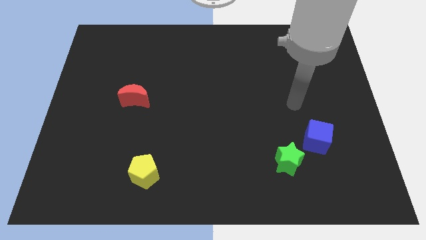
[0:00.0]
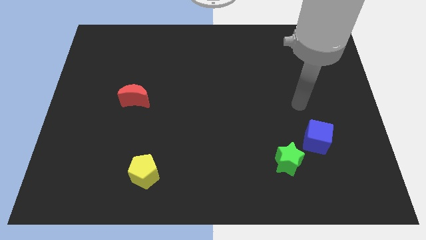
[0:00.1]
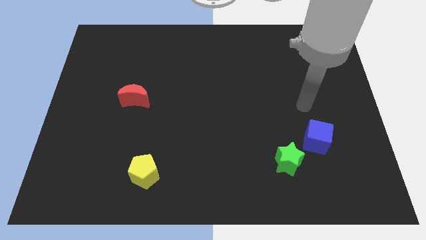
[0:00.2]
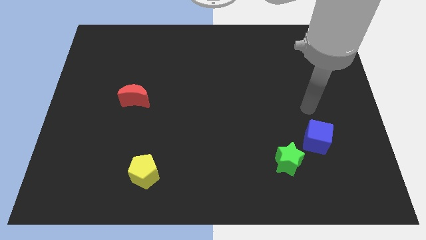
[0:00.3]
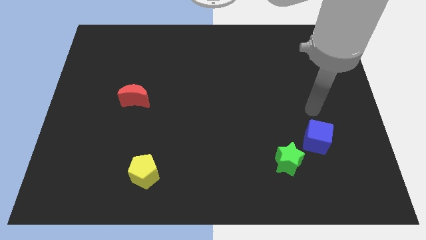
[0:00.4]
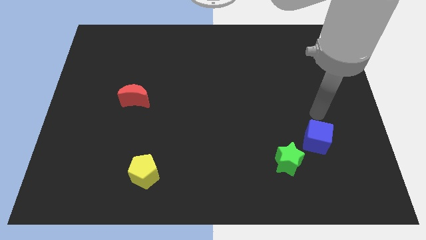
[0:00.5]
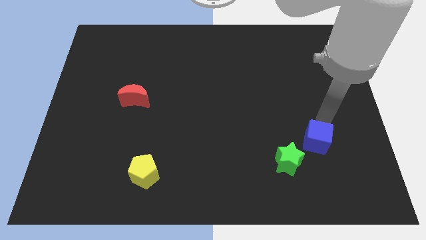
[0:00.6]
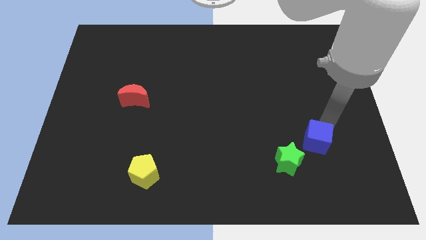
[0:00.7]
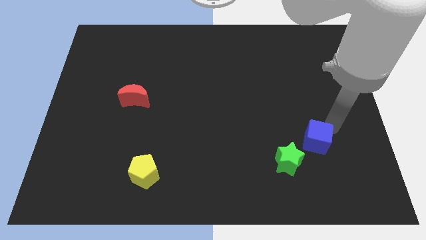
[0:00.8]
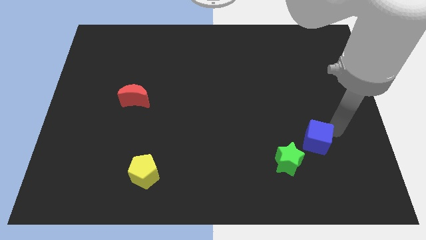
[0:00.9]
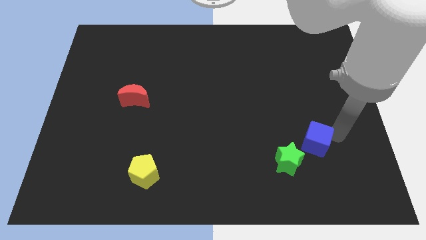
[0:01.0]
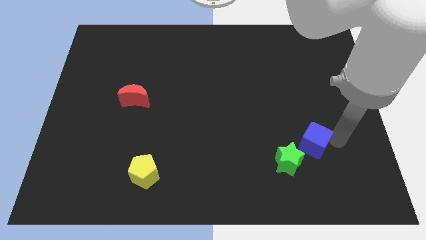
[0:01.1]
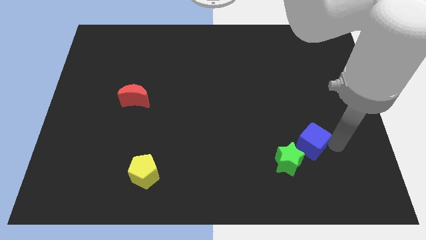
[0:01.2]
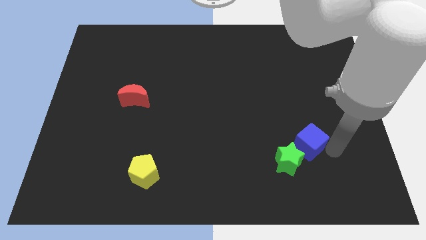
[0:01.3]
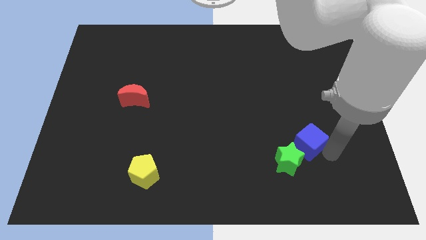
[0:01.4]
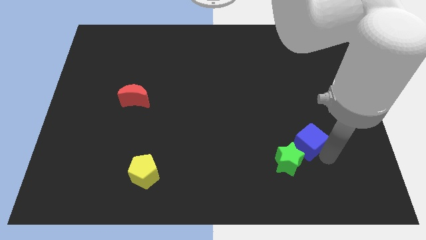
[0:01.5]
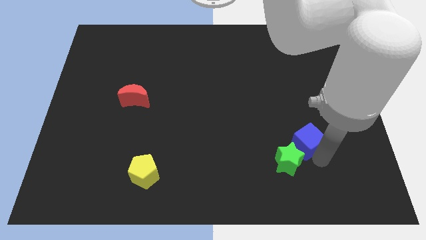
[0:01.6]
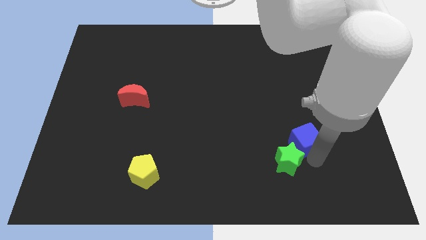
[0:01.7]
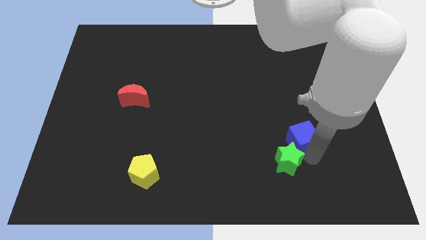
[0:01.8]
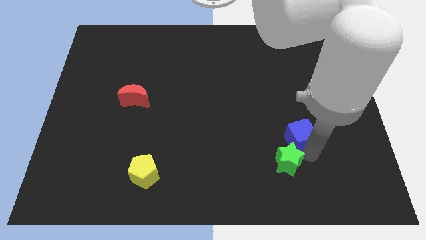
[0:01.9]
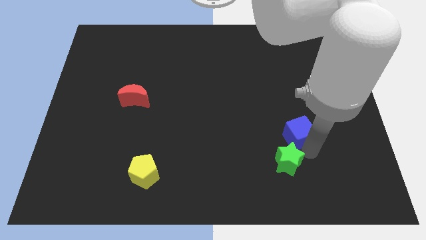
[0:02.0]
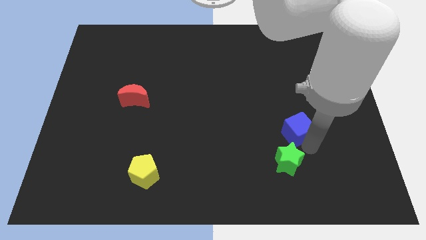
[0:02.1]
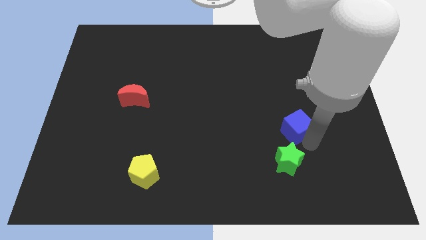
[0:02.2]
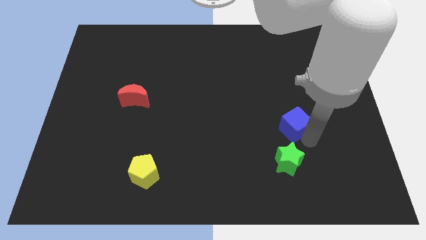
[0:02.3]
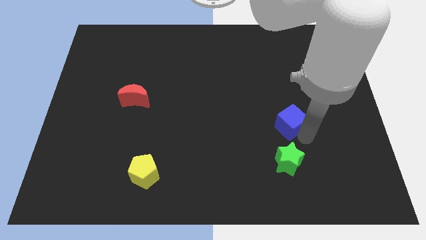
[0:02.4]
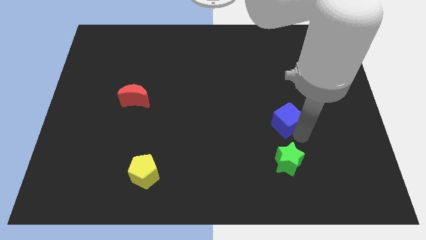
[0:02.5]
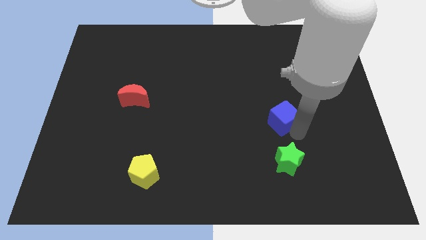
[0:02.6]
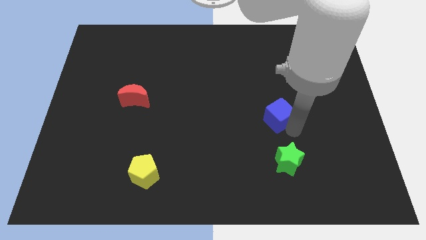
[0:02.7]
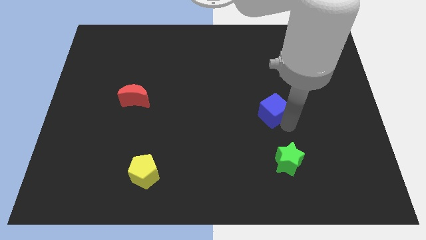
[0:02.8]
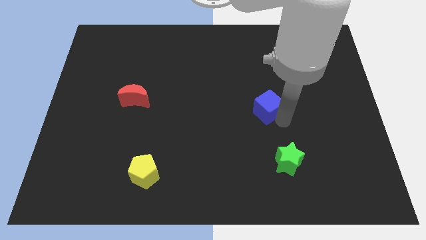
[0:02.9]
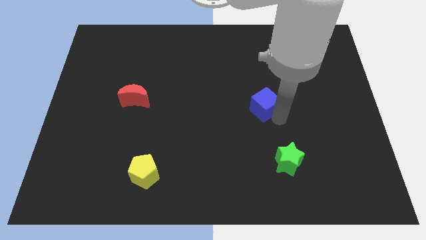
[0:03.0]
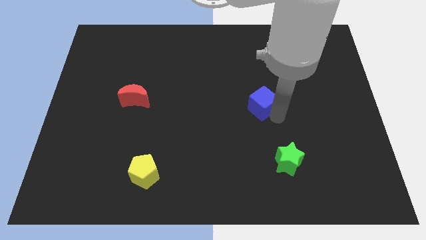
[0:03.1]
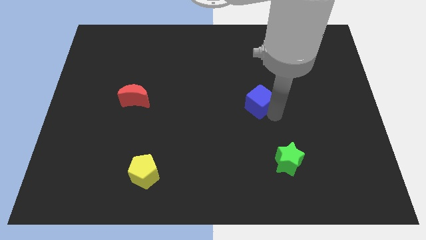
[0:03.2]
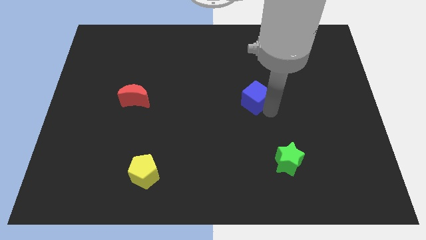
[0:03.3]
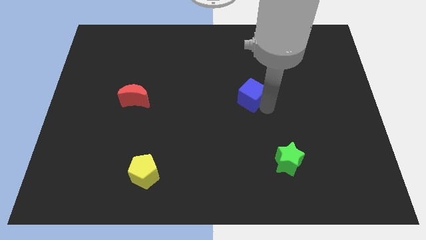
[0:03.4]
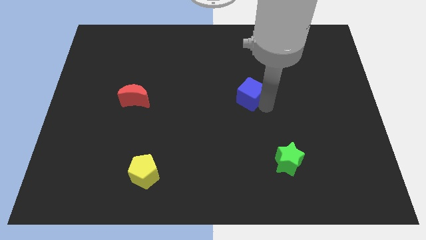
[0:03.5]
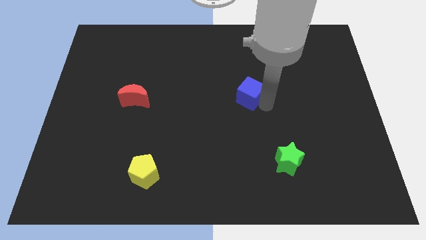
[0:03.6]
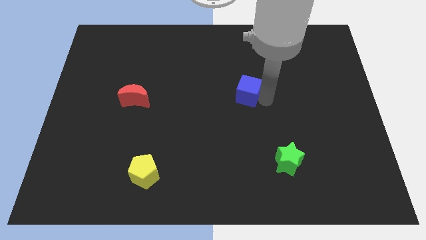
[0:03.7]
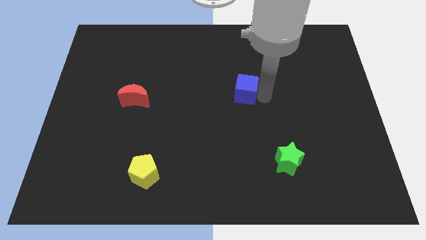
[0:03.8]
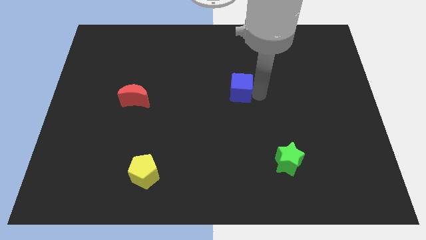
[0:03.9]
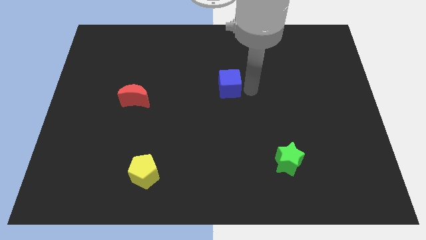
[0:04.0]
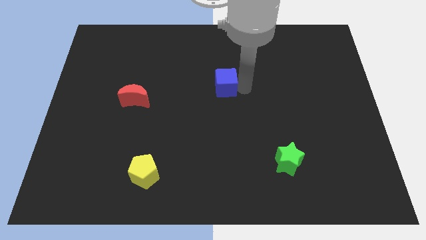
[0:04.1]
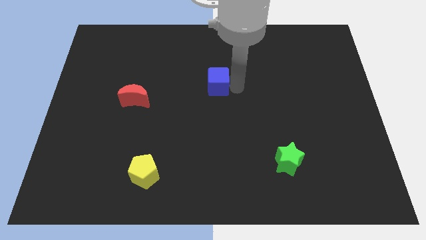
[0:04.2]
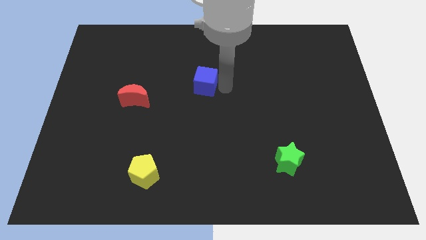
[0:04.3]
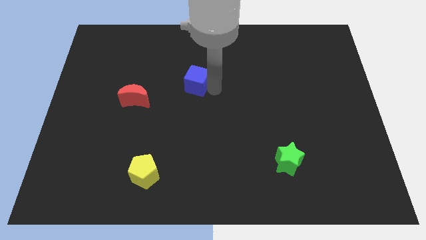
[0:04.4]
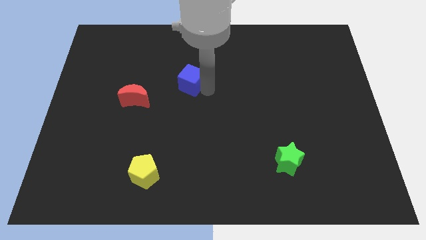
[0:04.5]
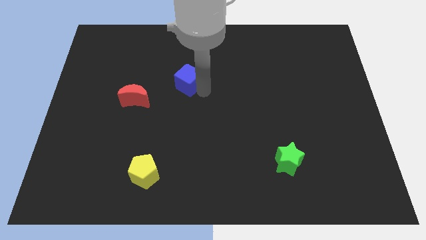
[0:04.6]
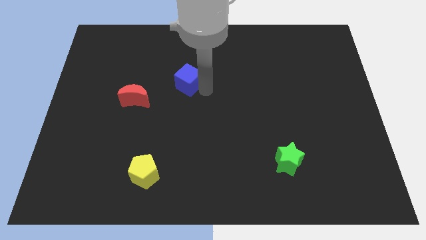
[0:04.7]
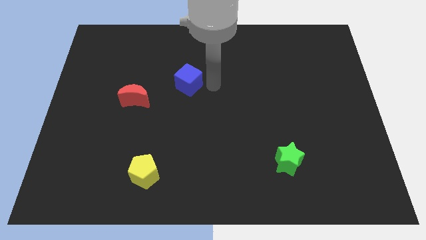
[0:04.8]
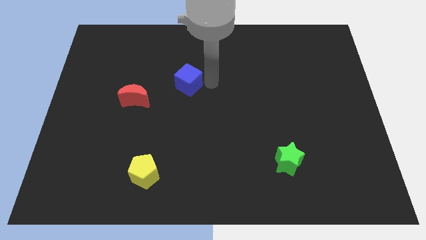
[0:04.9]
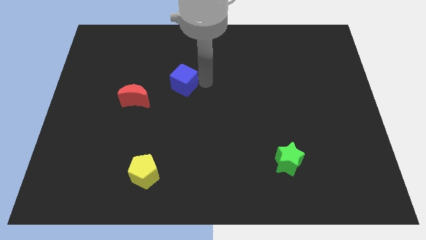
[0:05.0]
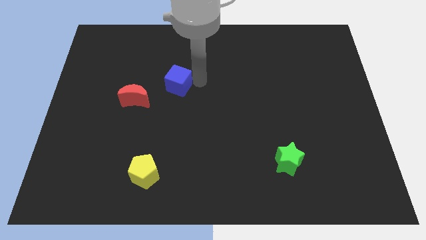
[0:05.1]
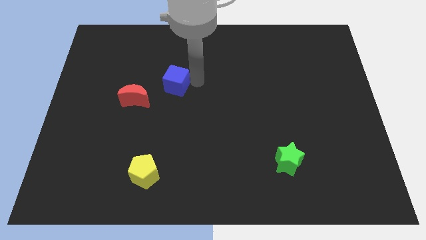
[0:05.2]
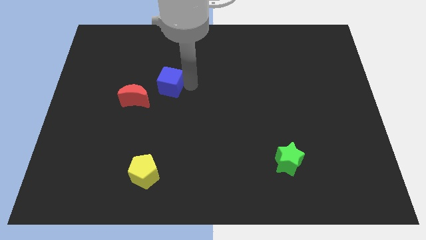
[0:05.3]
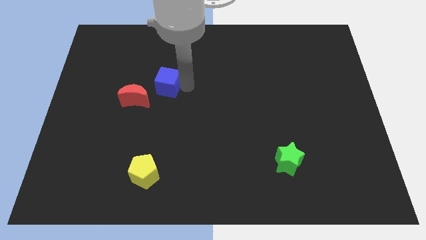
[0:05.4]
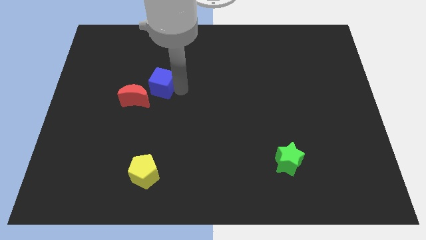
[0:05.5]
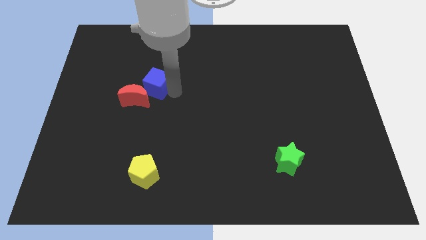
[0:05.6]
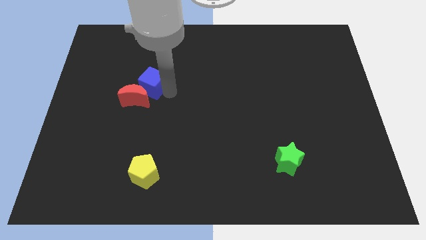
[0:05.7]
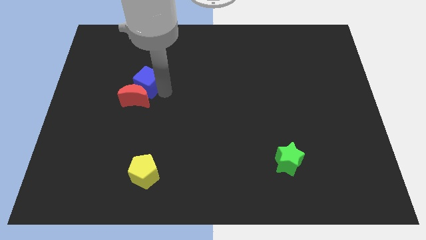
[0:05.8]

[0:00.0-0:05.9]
slide the cube to the red moon

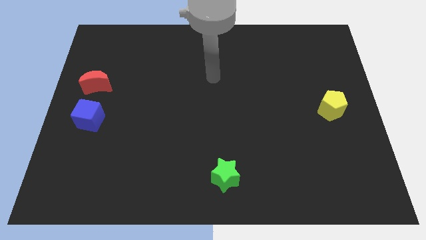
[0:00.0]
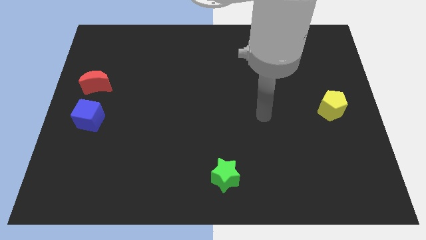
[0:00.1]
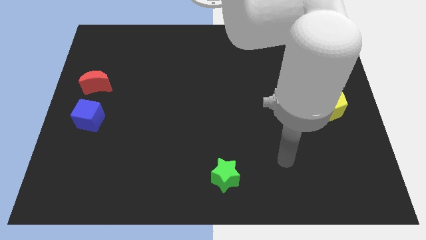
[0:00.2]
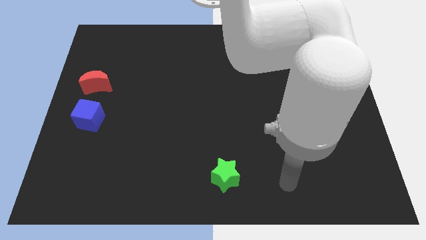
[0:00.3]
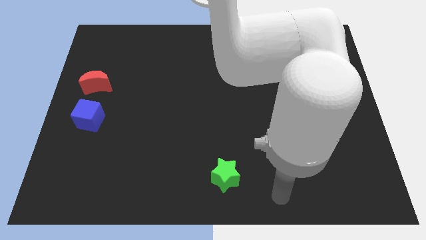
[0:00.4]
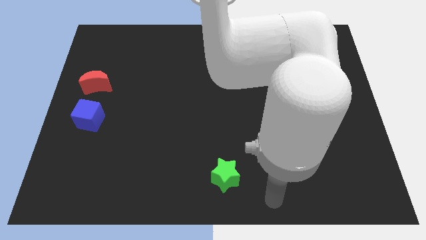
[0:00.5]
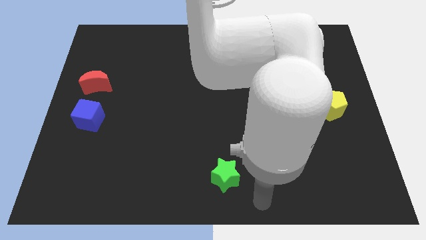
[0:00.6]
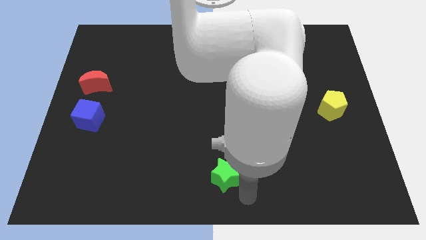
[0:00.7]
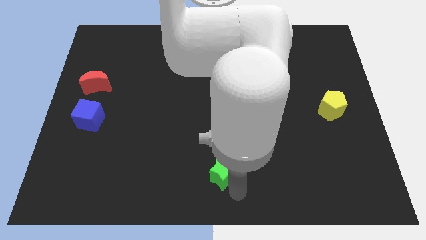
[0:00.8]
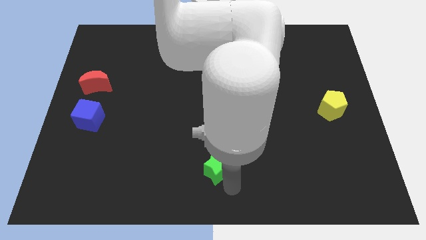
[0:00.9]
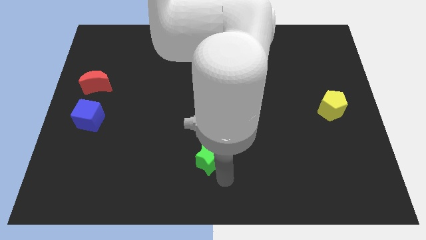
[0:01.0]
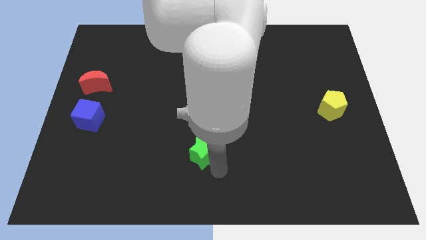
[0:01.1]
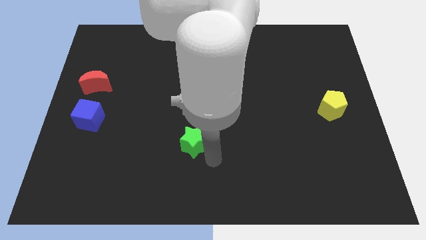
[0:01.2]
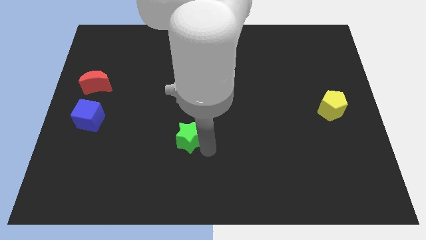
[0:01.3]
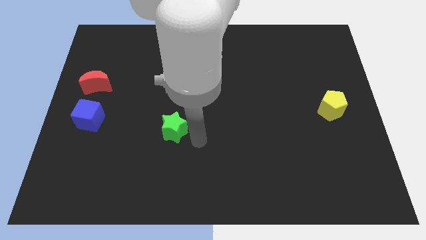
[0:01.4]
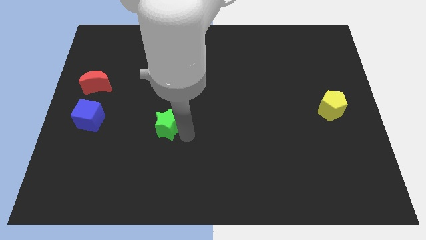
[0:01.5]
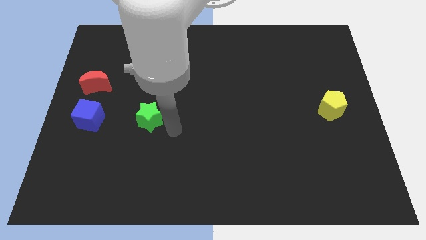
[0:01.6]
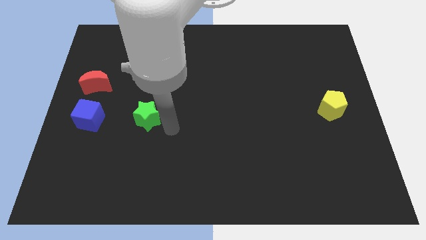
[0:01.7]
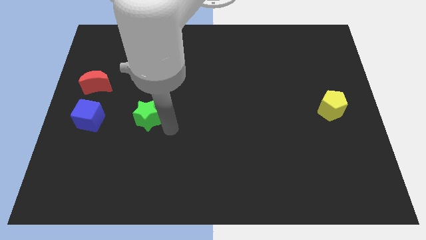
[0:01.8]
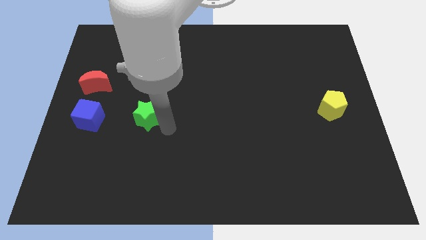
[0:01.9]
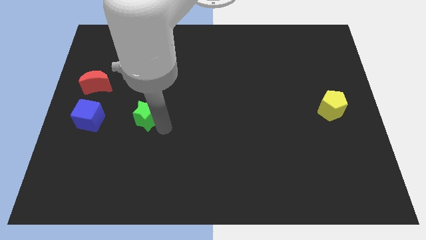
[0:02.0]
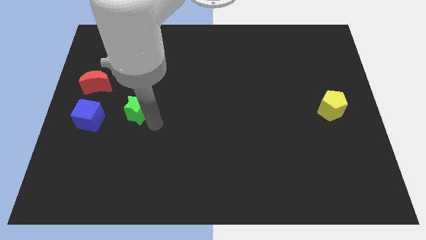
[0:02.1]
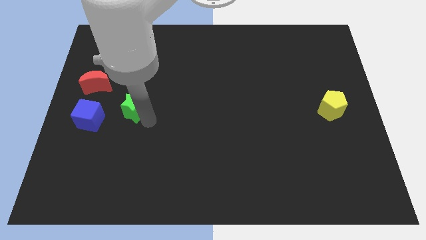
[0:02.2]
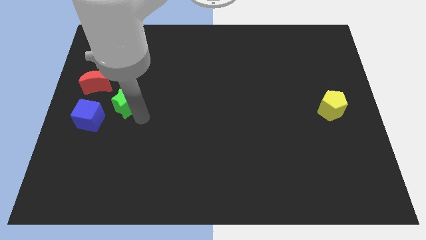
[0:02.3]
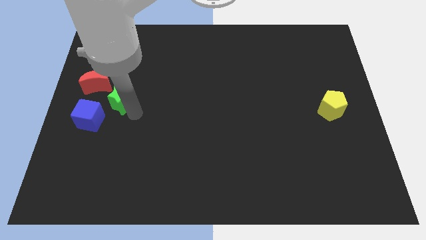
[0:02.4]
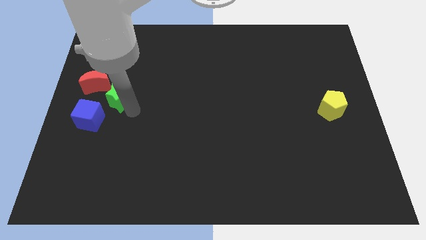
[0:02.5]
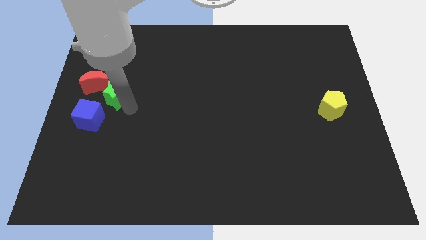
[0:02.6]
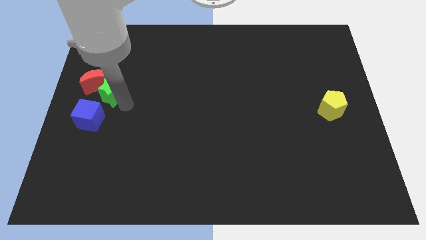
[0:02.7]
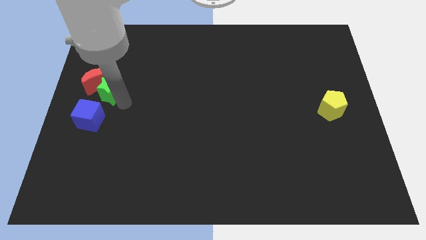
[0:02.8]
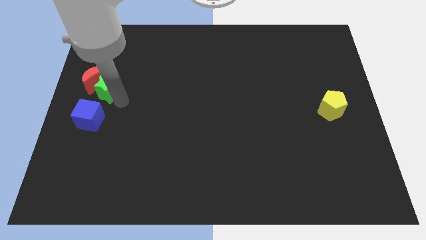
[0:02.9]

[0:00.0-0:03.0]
move the green star close to the red block
